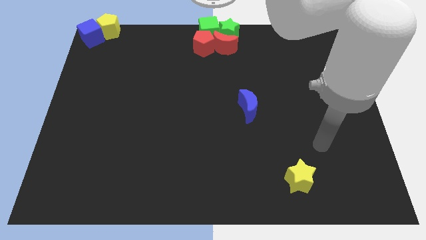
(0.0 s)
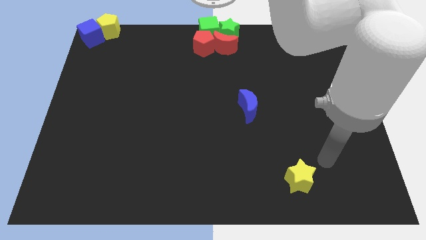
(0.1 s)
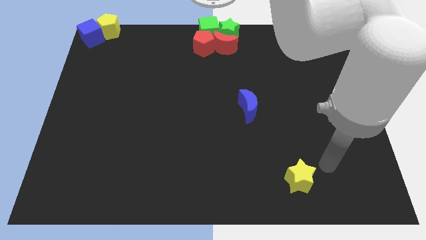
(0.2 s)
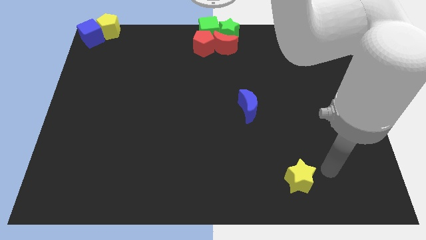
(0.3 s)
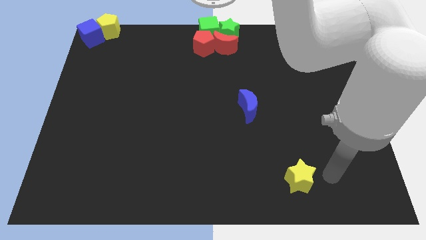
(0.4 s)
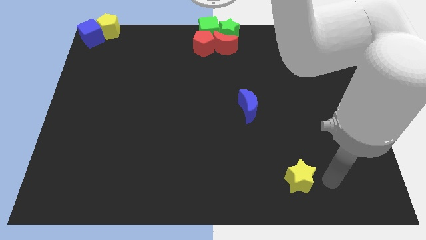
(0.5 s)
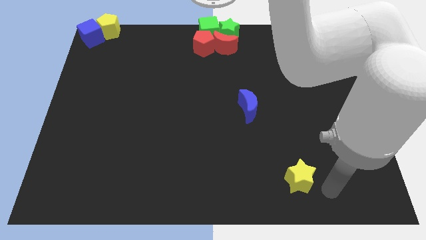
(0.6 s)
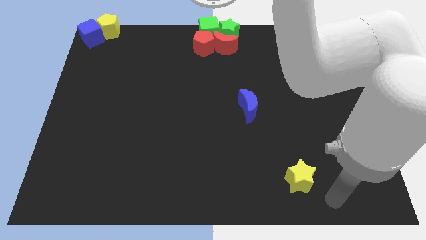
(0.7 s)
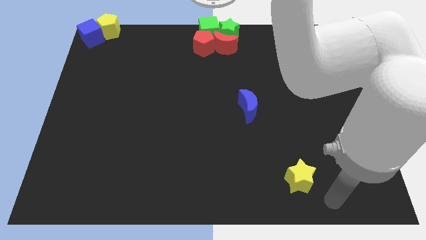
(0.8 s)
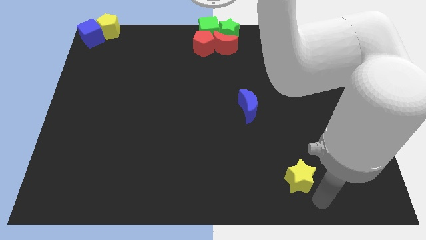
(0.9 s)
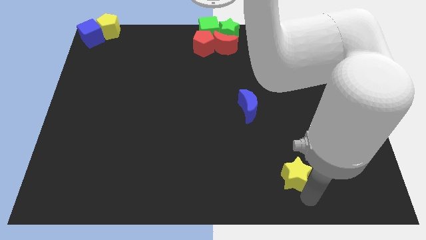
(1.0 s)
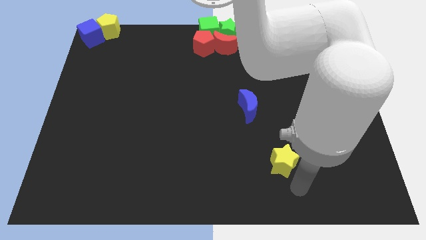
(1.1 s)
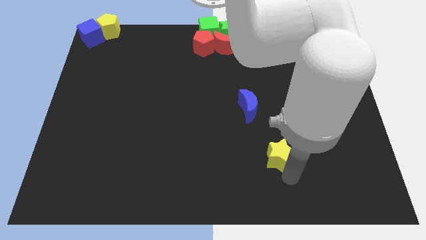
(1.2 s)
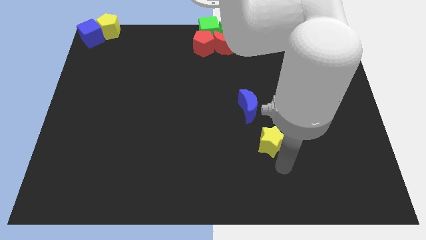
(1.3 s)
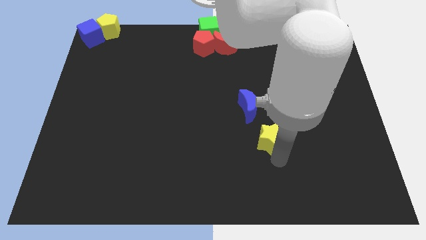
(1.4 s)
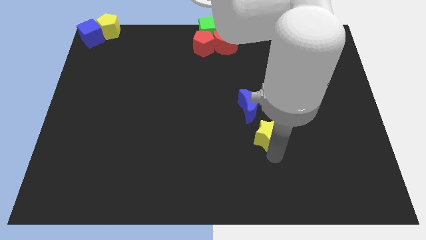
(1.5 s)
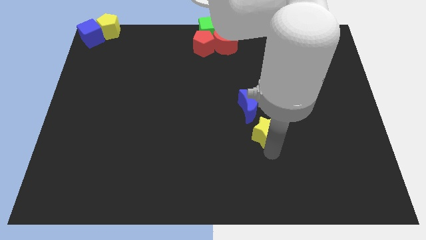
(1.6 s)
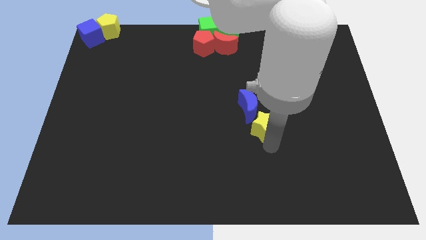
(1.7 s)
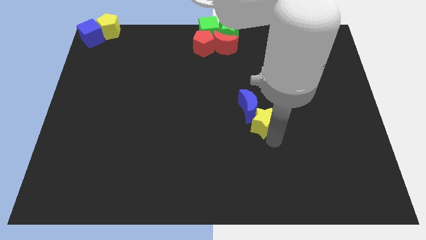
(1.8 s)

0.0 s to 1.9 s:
move the yellow star to right side of the blue moon

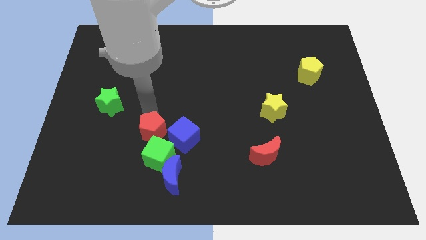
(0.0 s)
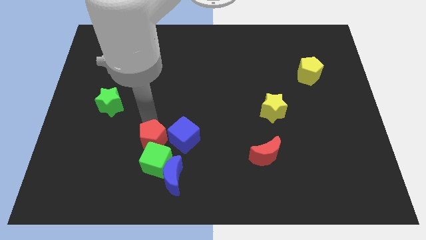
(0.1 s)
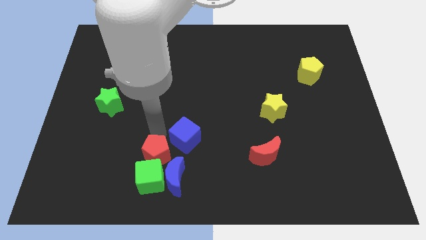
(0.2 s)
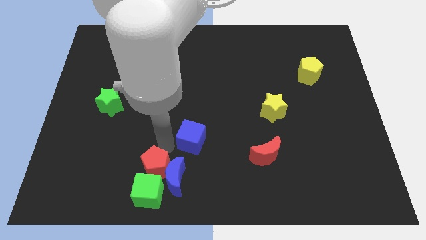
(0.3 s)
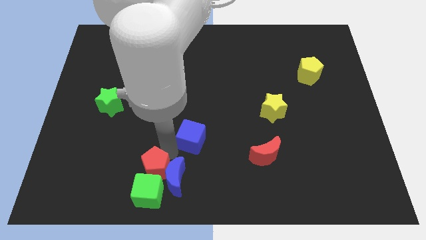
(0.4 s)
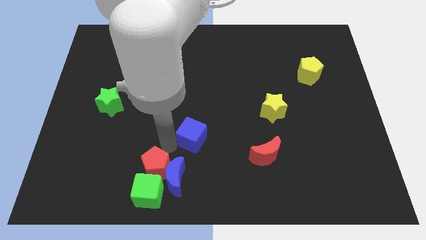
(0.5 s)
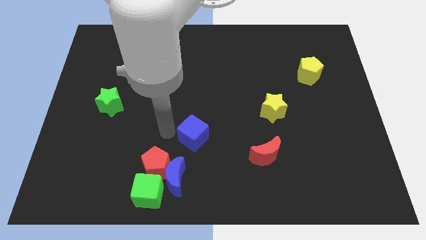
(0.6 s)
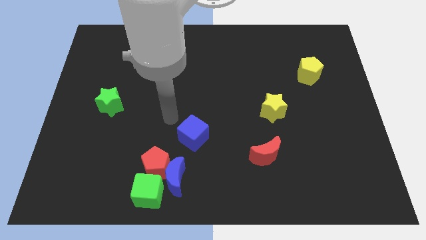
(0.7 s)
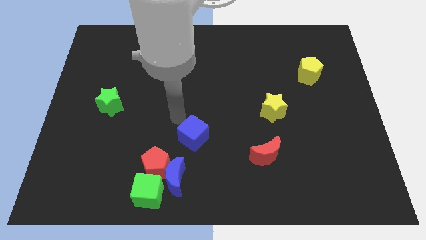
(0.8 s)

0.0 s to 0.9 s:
push red pentagon into green cube

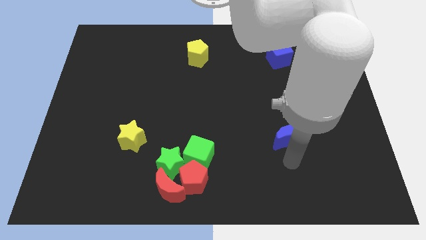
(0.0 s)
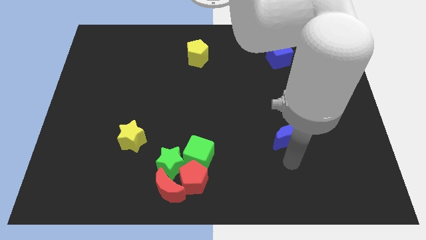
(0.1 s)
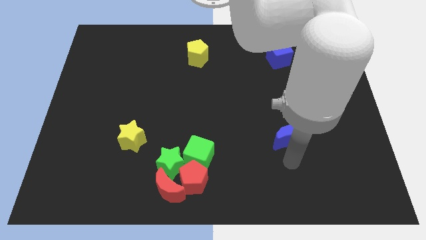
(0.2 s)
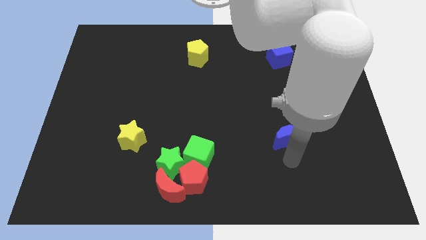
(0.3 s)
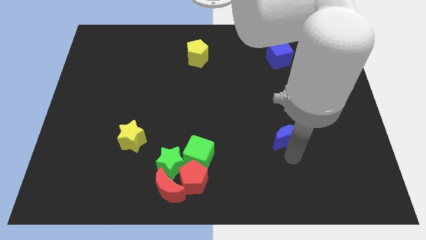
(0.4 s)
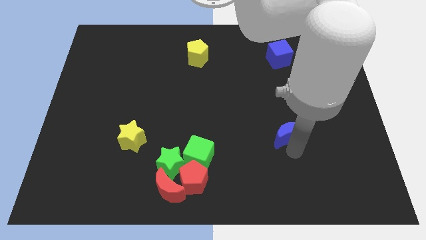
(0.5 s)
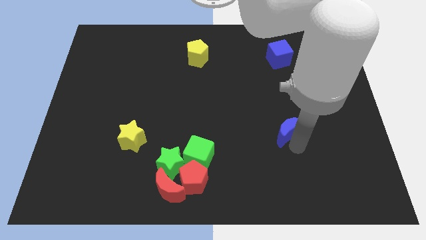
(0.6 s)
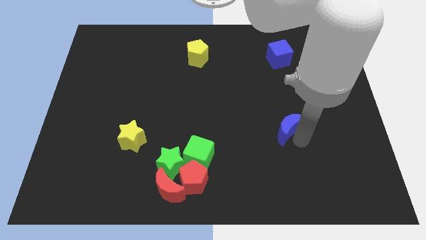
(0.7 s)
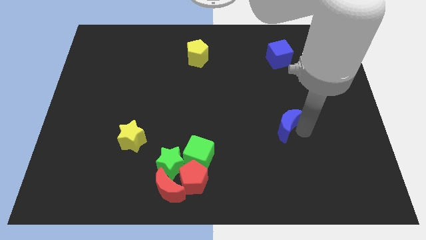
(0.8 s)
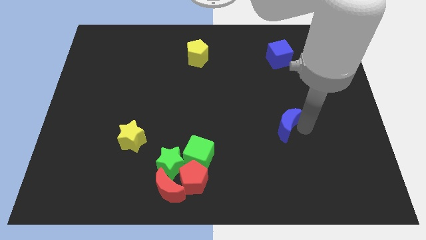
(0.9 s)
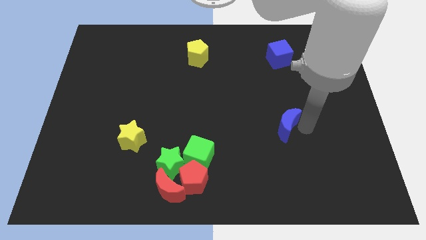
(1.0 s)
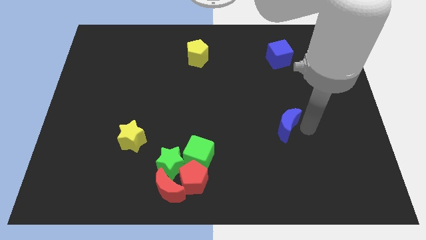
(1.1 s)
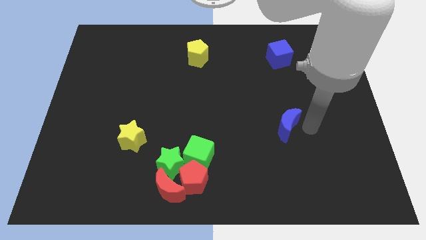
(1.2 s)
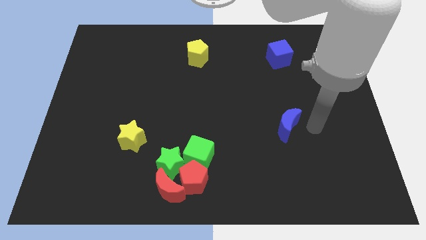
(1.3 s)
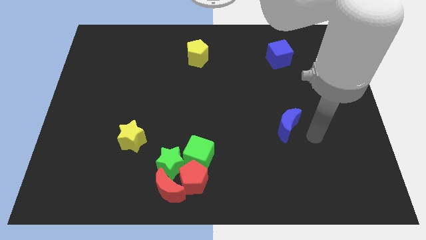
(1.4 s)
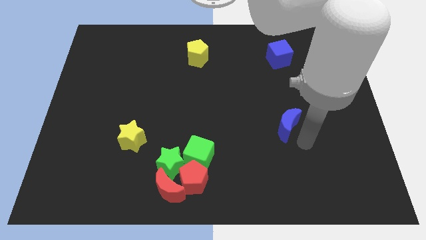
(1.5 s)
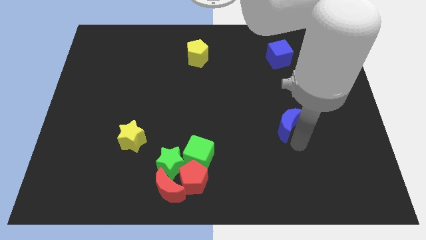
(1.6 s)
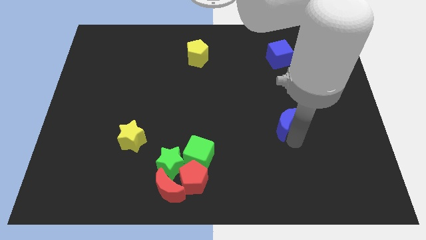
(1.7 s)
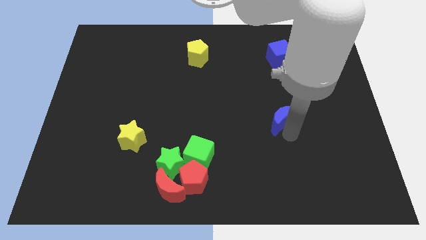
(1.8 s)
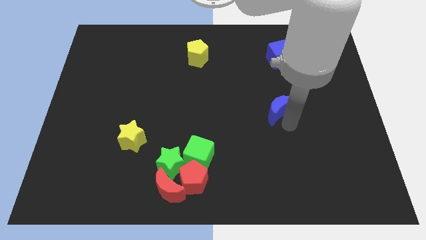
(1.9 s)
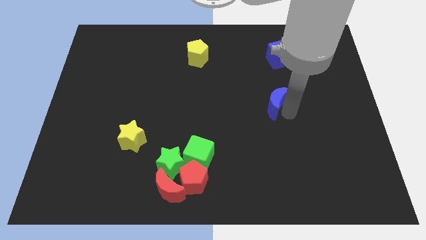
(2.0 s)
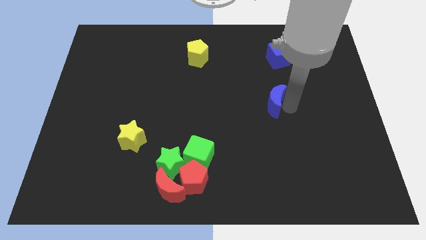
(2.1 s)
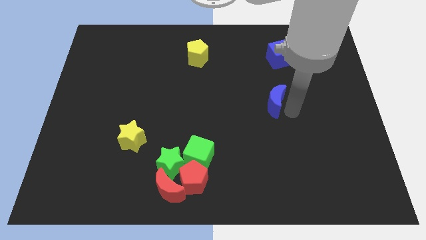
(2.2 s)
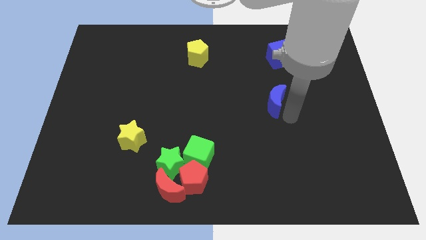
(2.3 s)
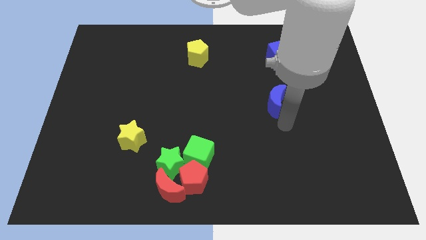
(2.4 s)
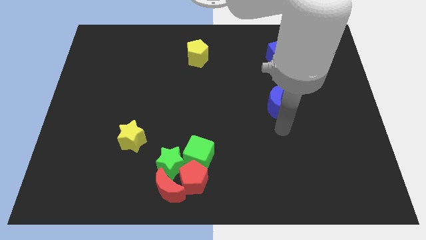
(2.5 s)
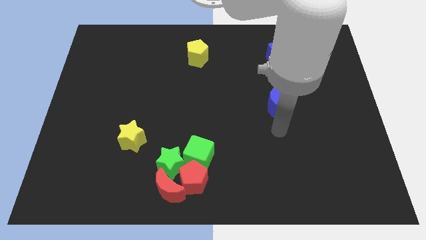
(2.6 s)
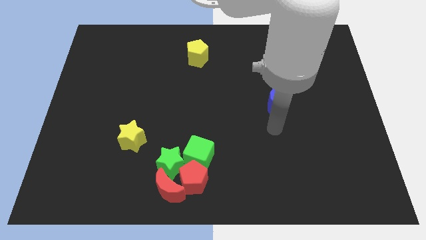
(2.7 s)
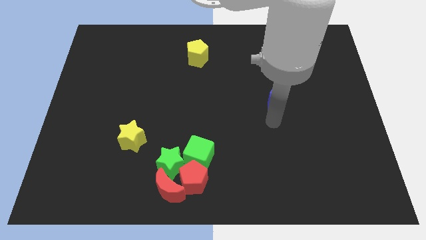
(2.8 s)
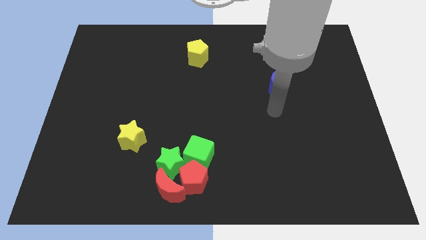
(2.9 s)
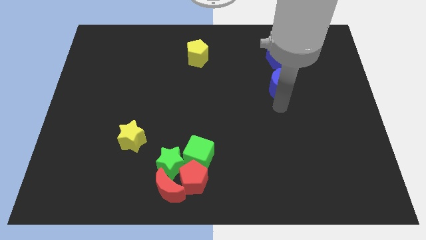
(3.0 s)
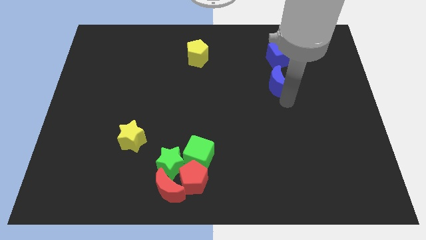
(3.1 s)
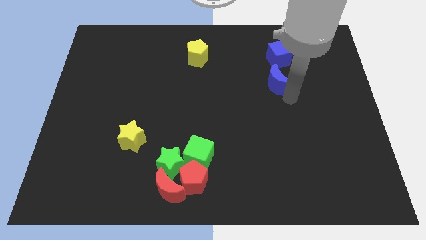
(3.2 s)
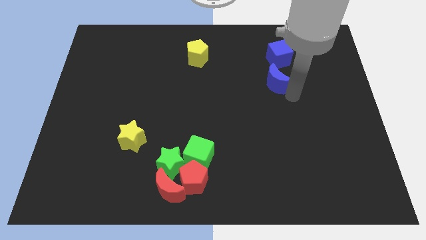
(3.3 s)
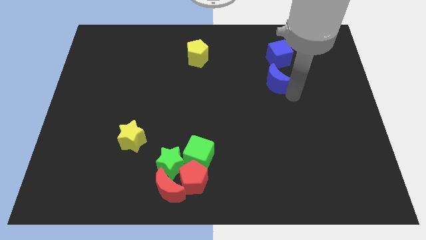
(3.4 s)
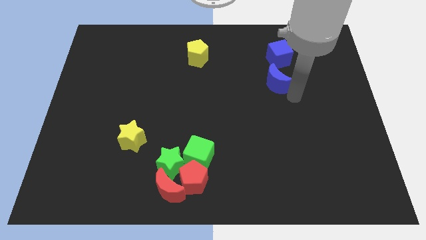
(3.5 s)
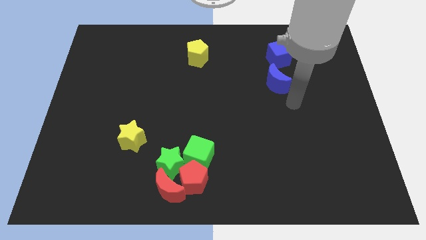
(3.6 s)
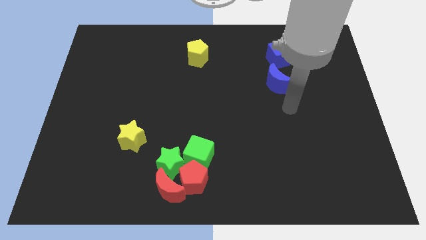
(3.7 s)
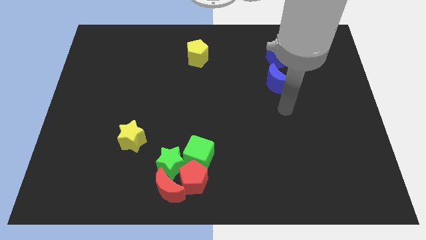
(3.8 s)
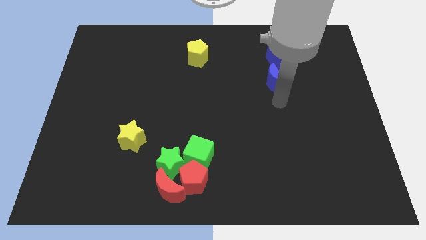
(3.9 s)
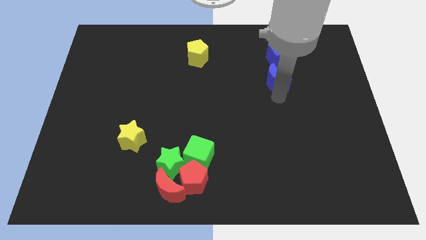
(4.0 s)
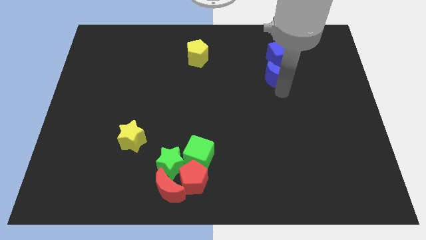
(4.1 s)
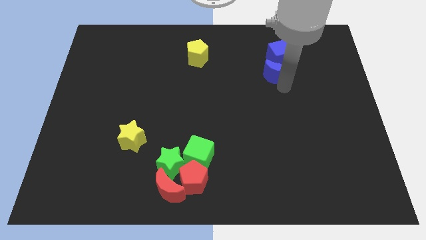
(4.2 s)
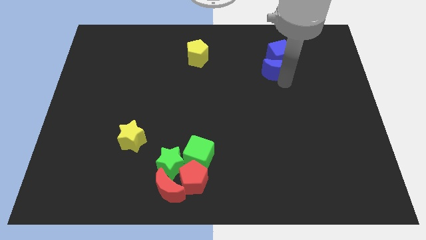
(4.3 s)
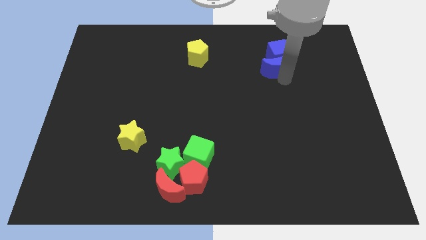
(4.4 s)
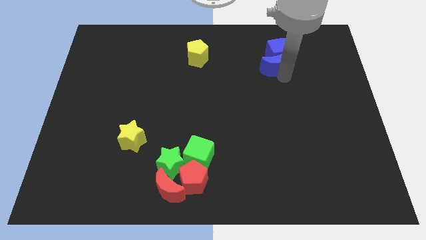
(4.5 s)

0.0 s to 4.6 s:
push the blue moon in to blue cube

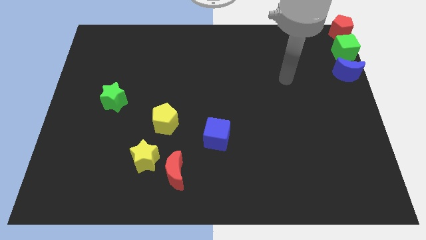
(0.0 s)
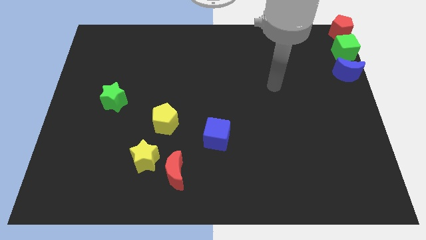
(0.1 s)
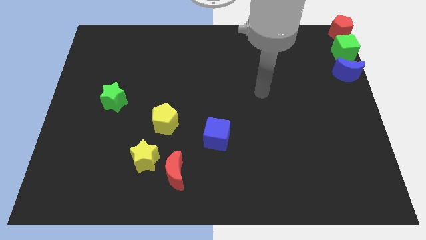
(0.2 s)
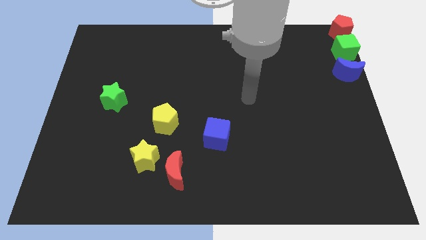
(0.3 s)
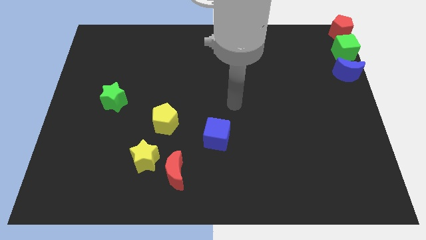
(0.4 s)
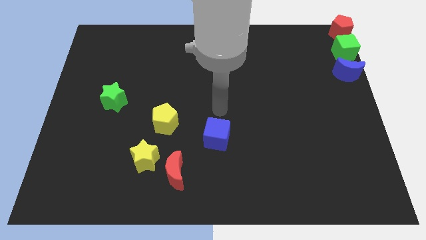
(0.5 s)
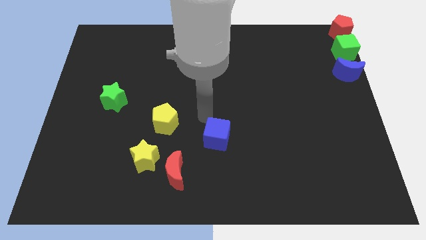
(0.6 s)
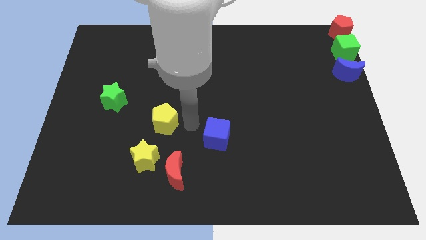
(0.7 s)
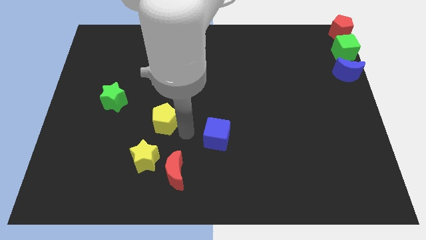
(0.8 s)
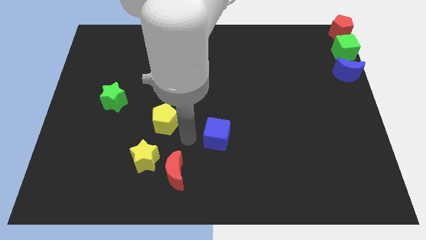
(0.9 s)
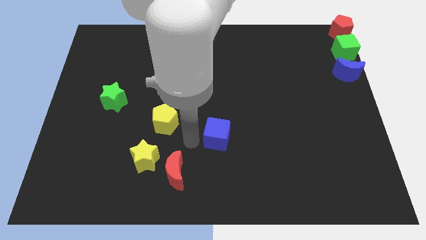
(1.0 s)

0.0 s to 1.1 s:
point your arm at the left side of the blue cube

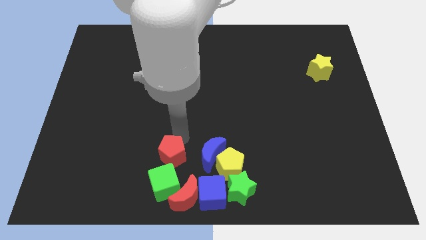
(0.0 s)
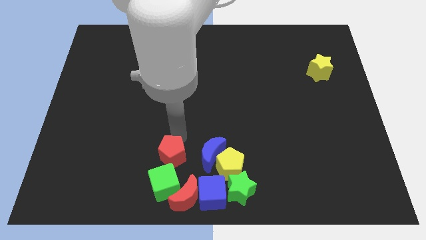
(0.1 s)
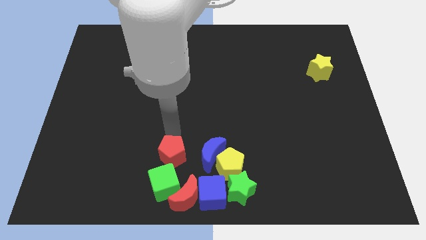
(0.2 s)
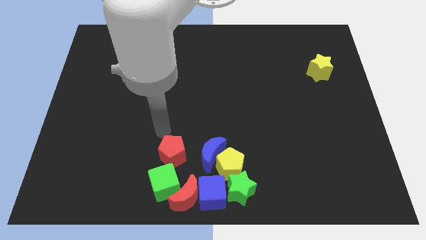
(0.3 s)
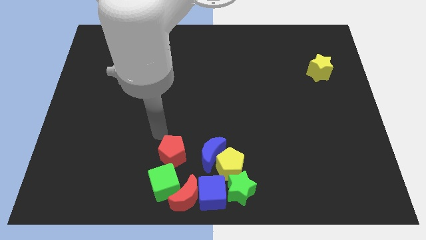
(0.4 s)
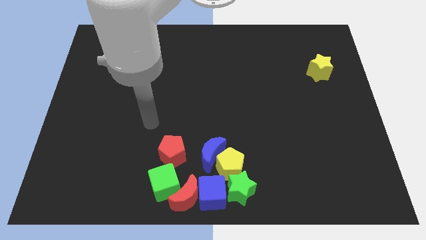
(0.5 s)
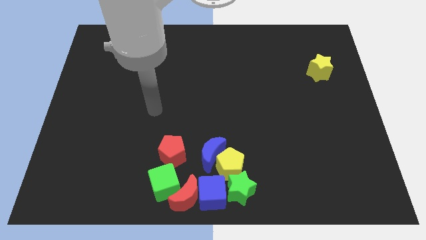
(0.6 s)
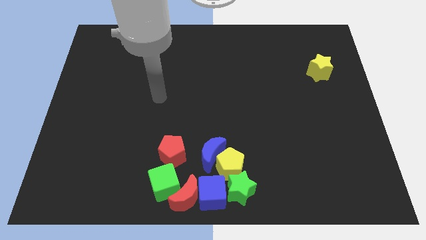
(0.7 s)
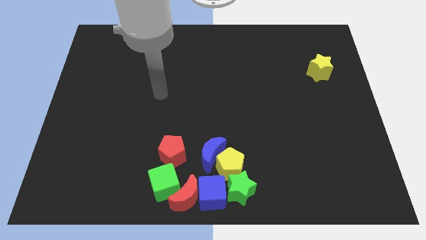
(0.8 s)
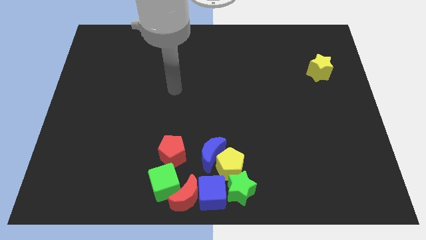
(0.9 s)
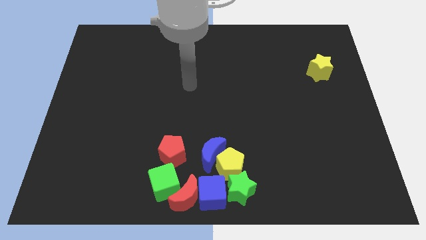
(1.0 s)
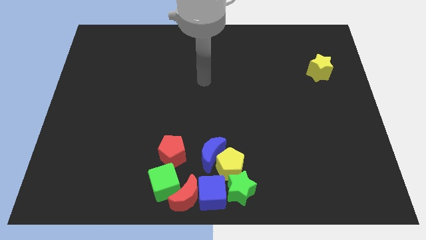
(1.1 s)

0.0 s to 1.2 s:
move your arm to the centre of the board
